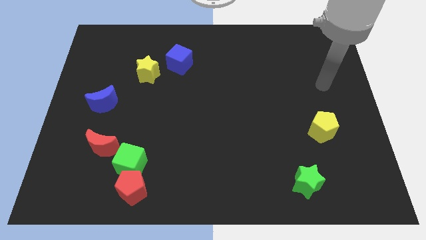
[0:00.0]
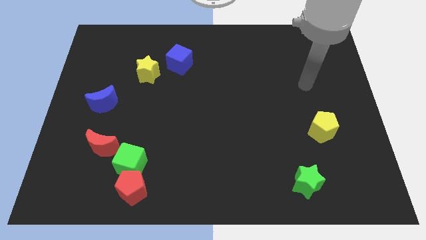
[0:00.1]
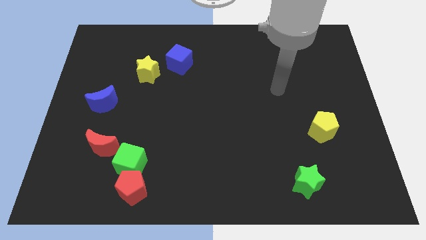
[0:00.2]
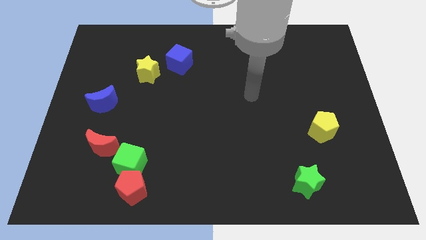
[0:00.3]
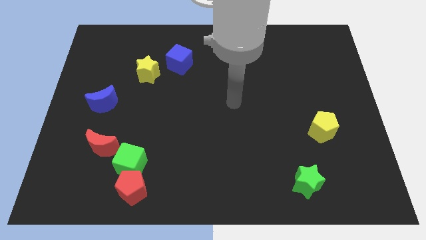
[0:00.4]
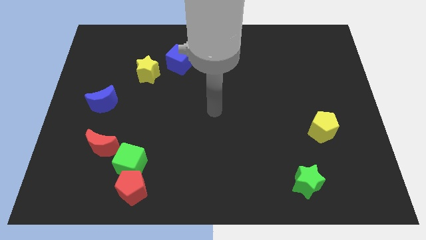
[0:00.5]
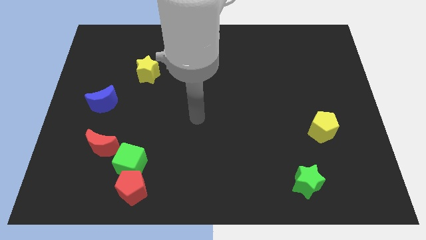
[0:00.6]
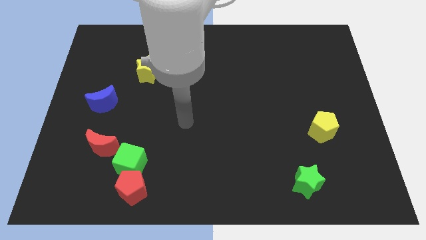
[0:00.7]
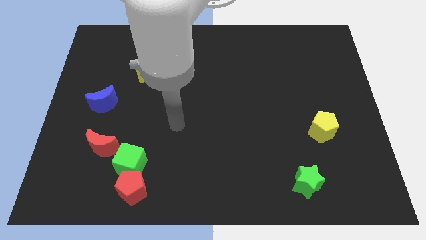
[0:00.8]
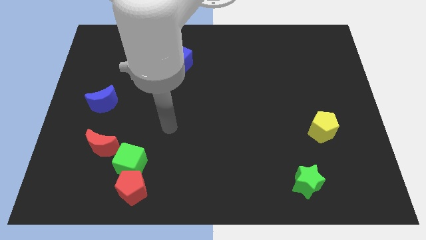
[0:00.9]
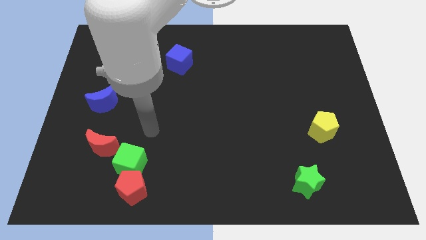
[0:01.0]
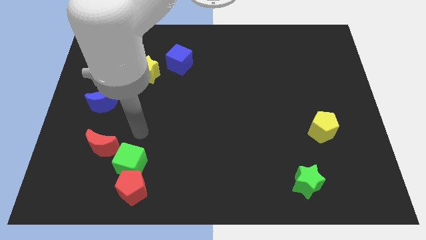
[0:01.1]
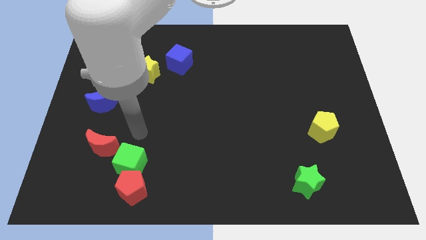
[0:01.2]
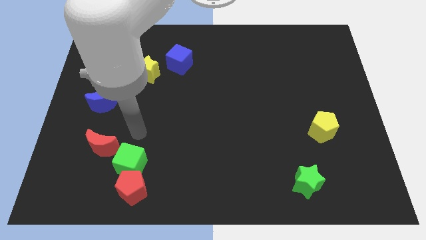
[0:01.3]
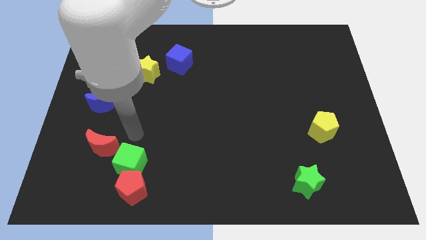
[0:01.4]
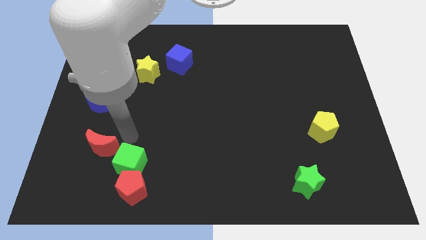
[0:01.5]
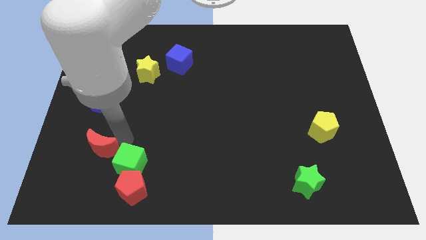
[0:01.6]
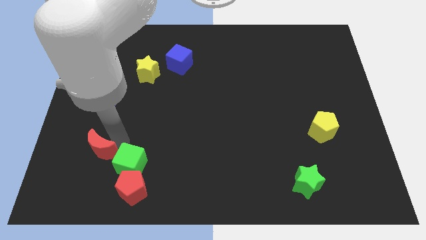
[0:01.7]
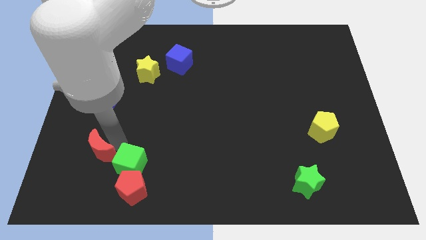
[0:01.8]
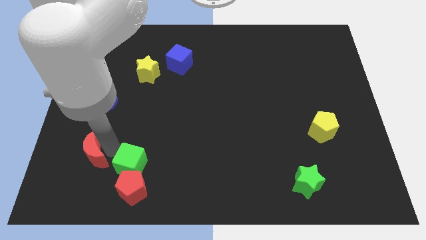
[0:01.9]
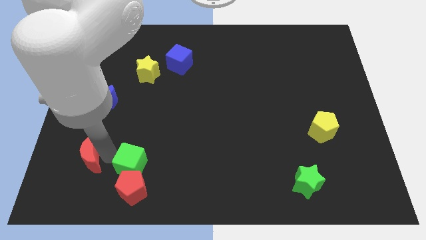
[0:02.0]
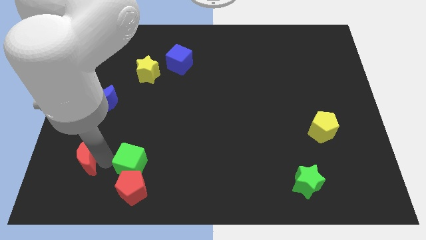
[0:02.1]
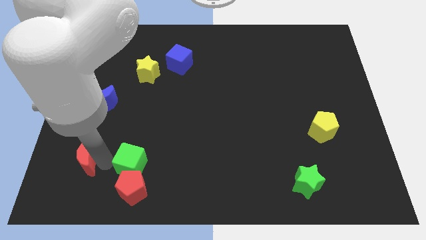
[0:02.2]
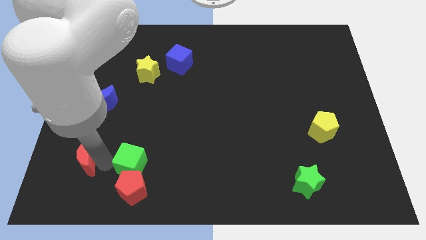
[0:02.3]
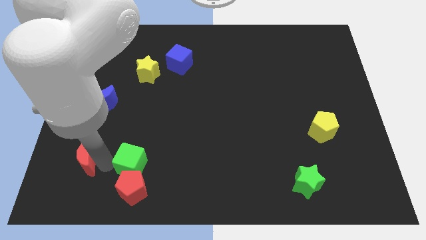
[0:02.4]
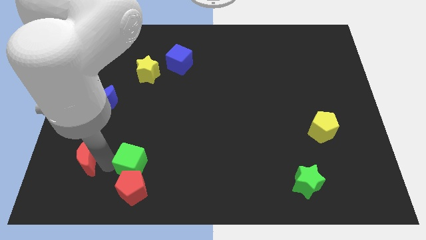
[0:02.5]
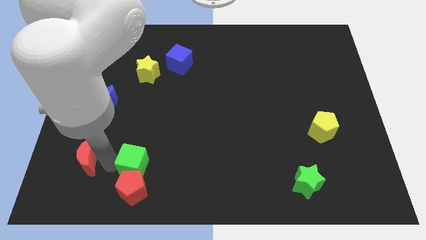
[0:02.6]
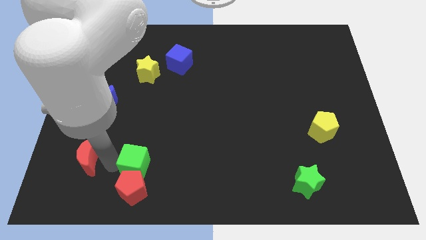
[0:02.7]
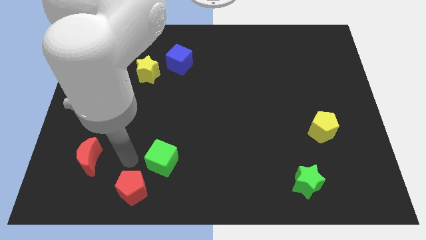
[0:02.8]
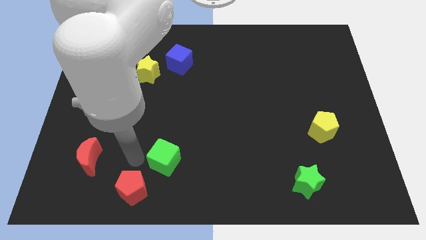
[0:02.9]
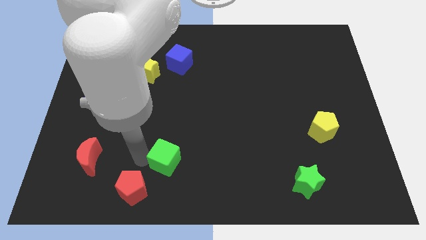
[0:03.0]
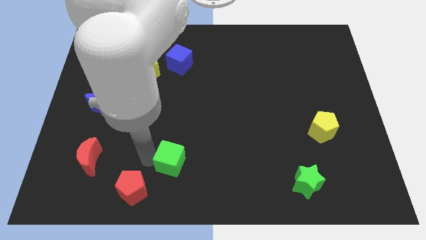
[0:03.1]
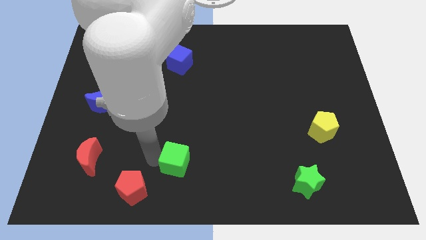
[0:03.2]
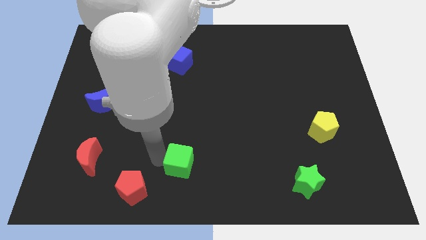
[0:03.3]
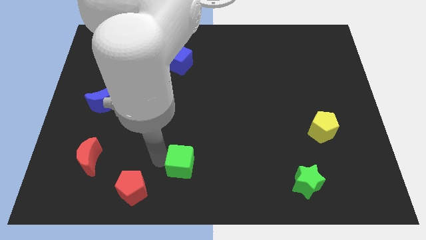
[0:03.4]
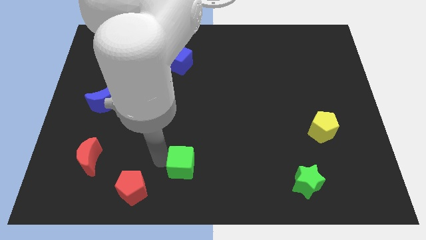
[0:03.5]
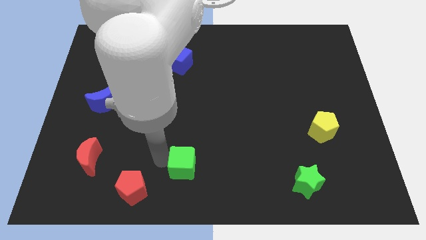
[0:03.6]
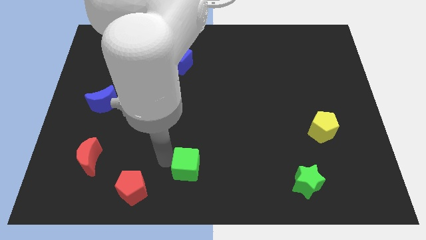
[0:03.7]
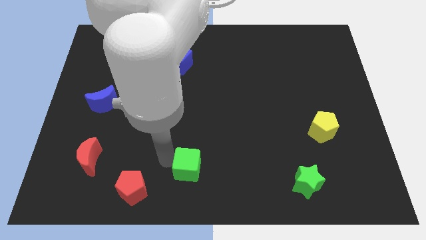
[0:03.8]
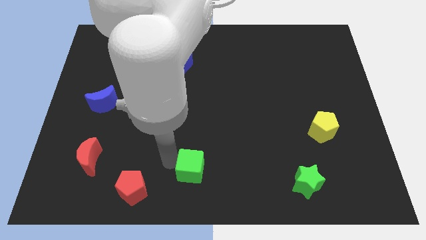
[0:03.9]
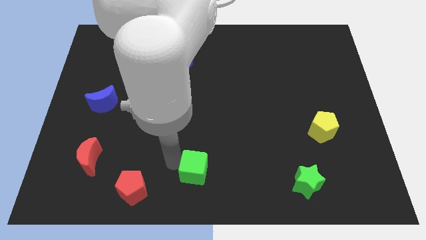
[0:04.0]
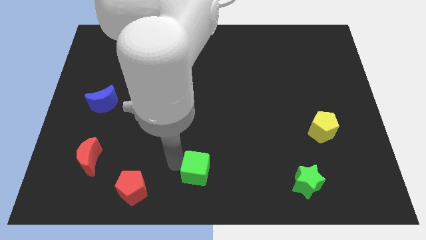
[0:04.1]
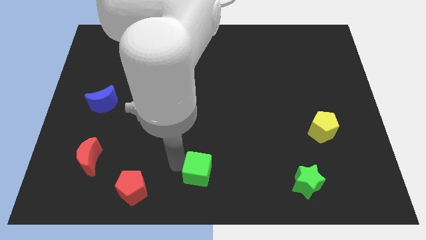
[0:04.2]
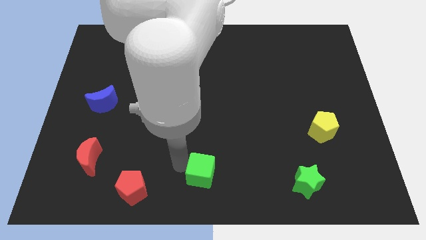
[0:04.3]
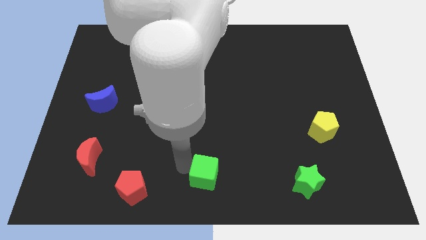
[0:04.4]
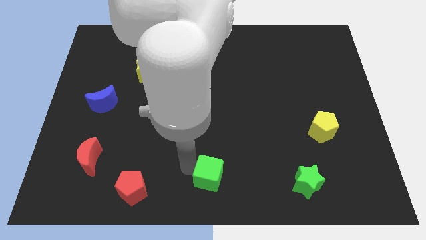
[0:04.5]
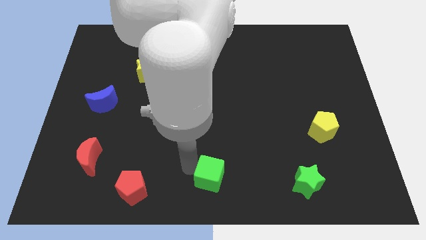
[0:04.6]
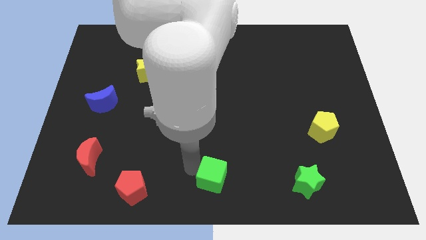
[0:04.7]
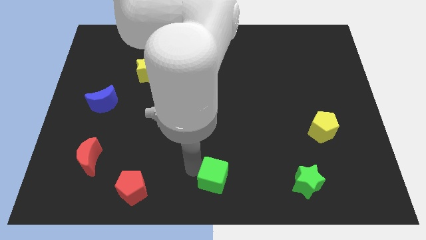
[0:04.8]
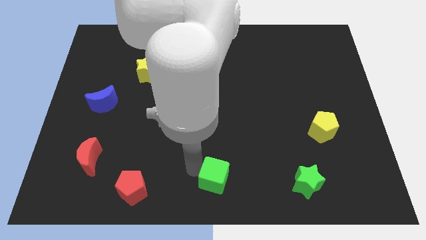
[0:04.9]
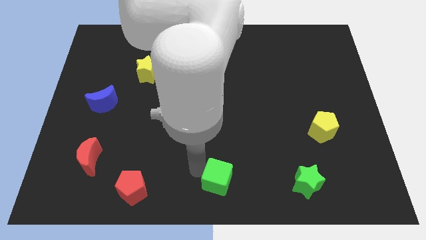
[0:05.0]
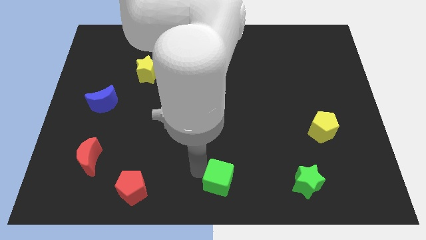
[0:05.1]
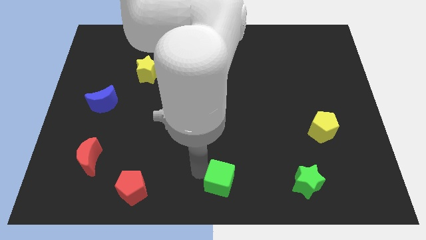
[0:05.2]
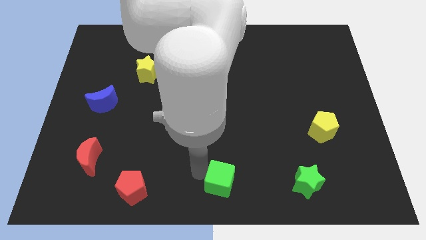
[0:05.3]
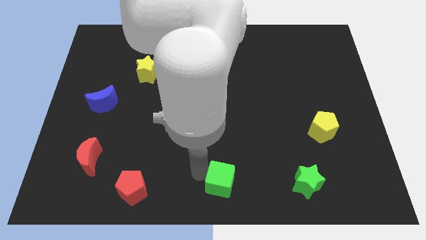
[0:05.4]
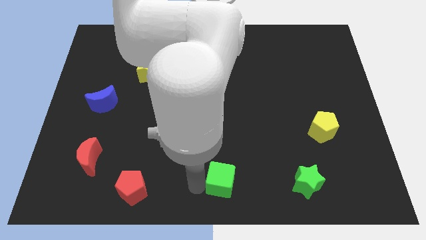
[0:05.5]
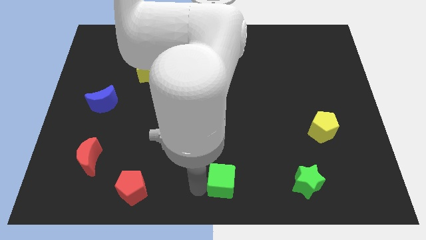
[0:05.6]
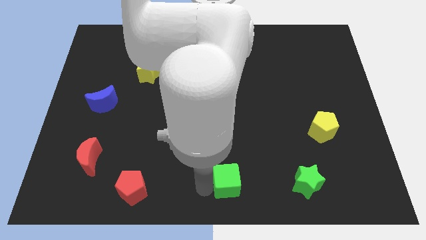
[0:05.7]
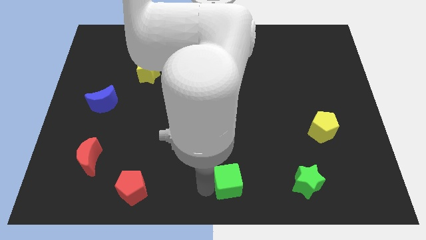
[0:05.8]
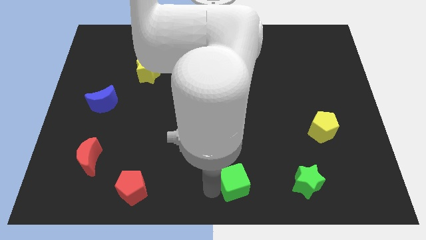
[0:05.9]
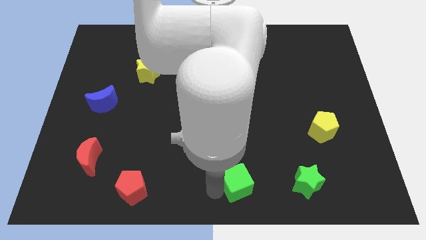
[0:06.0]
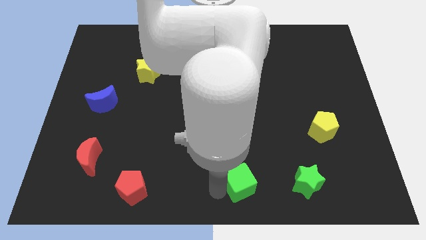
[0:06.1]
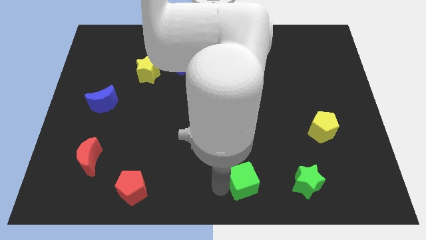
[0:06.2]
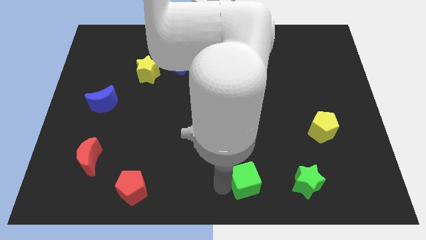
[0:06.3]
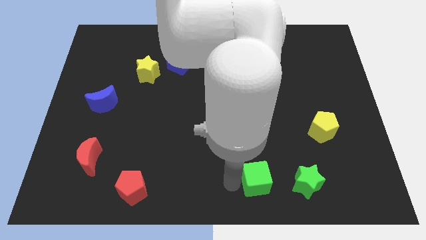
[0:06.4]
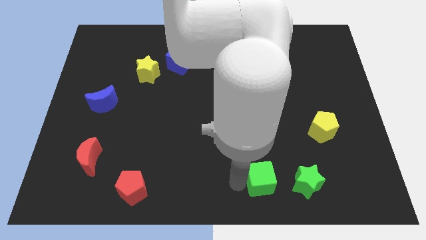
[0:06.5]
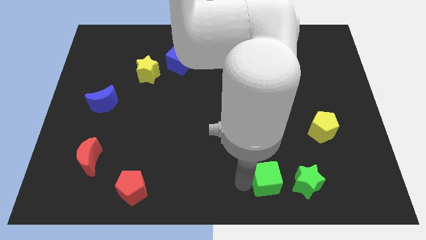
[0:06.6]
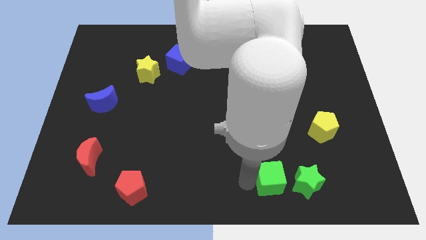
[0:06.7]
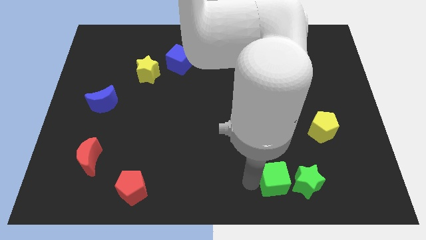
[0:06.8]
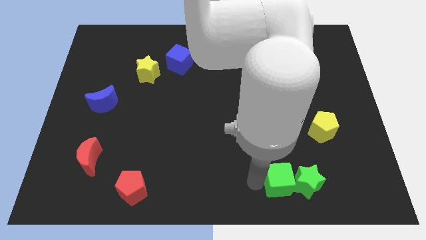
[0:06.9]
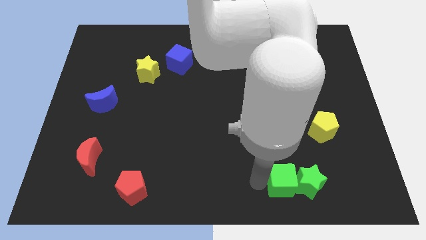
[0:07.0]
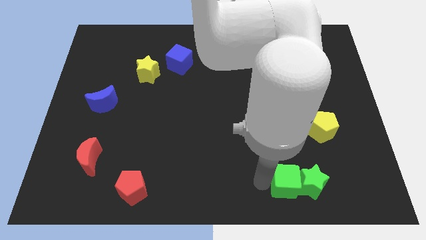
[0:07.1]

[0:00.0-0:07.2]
push the green cube to the green star

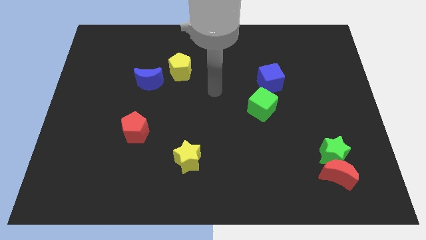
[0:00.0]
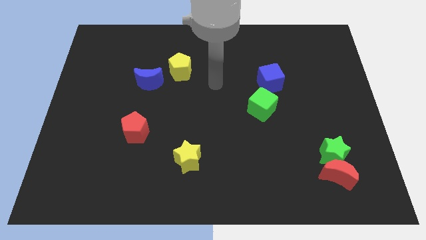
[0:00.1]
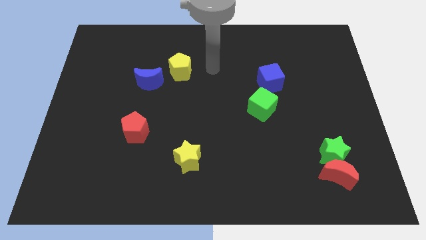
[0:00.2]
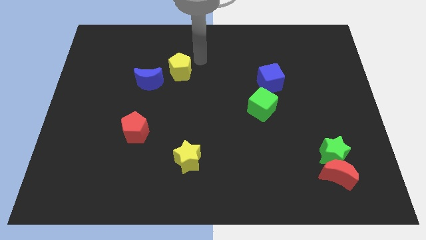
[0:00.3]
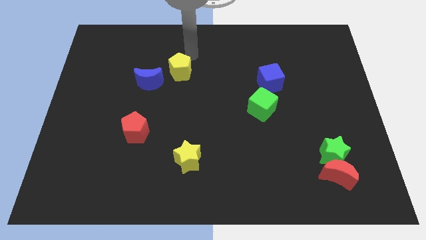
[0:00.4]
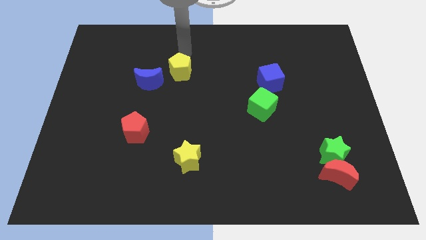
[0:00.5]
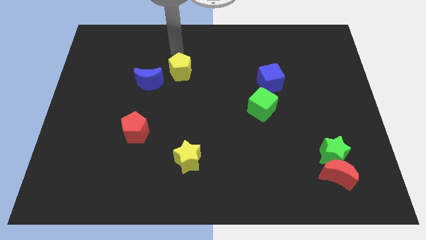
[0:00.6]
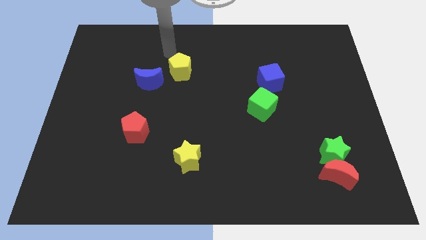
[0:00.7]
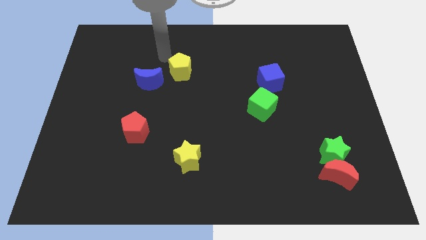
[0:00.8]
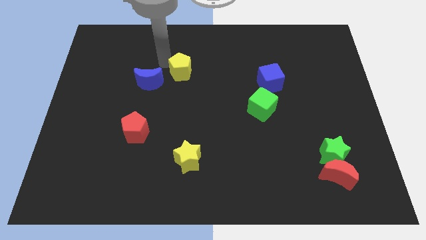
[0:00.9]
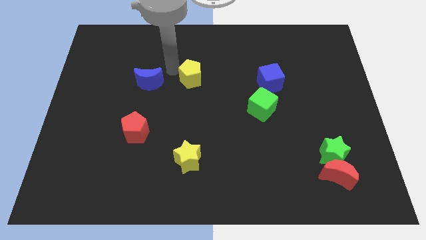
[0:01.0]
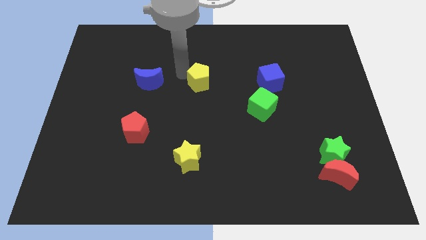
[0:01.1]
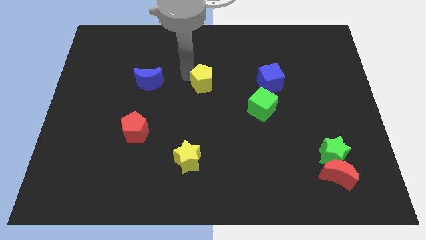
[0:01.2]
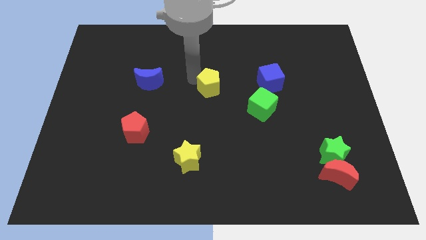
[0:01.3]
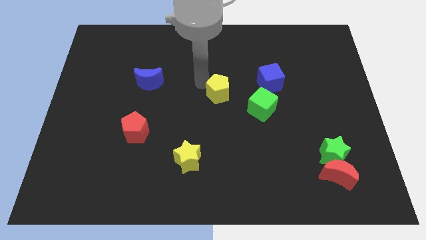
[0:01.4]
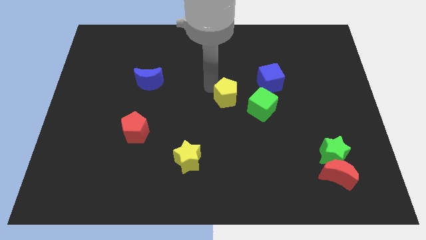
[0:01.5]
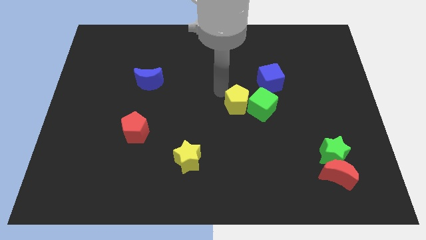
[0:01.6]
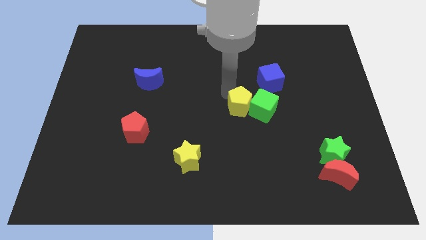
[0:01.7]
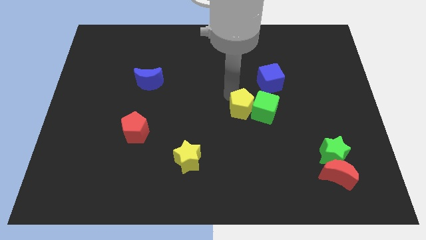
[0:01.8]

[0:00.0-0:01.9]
push the yellow pentagon towards the green cube
